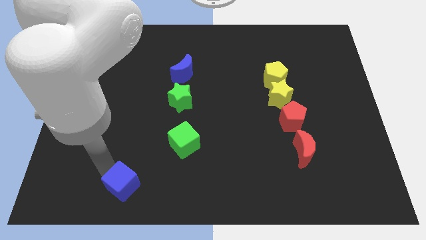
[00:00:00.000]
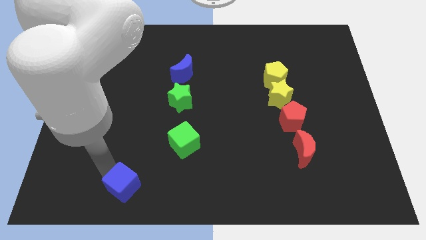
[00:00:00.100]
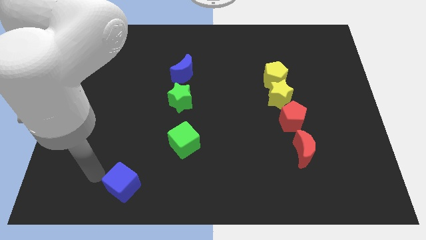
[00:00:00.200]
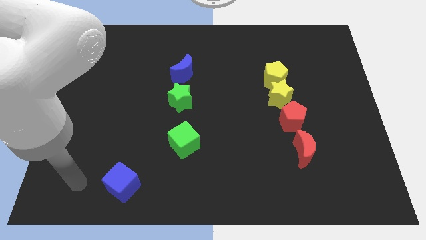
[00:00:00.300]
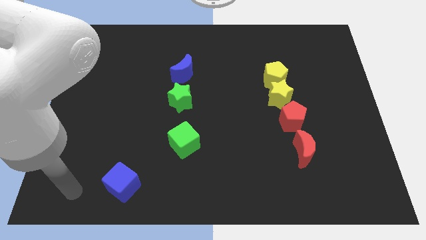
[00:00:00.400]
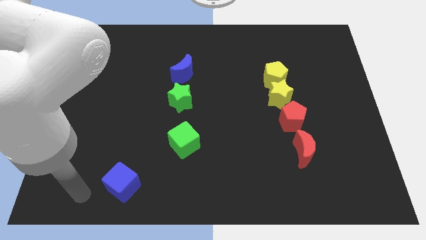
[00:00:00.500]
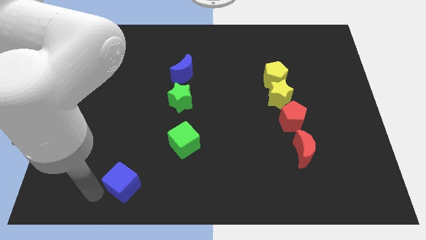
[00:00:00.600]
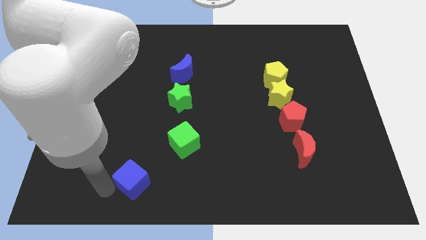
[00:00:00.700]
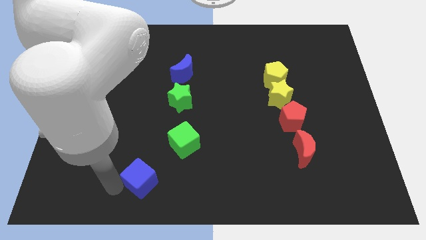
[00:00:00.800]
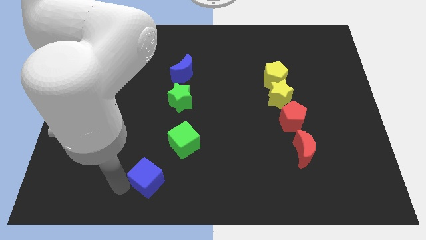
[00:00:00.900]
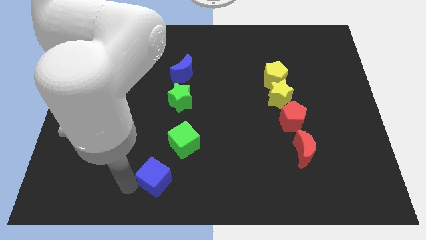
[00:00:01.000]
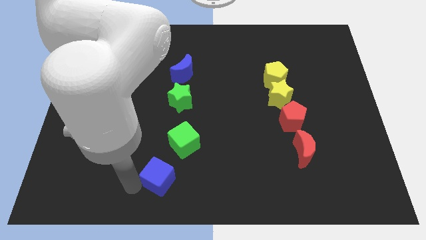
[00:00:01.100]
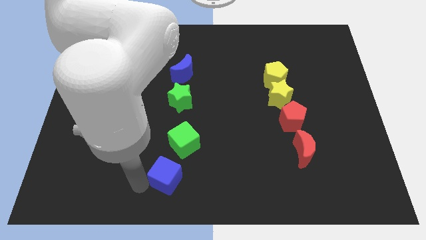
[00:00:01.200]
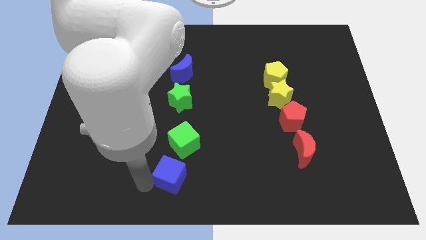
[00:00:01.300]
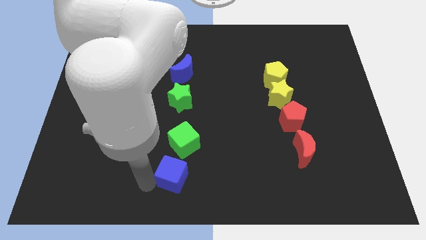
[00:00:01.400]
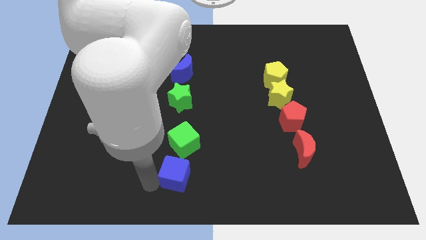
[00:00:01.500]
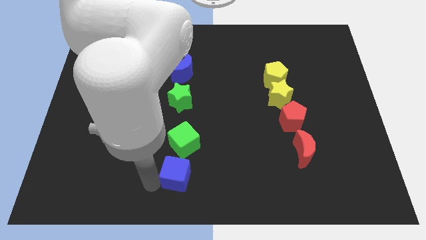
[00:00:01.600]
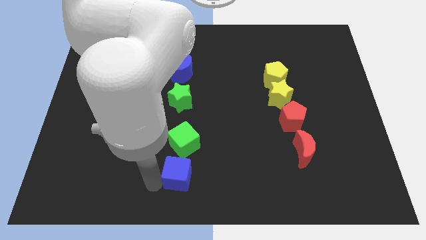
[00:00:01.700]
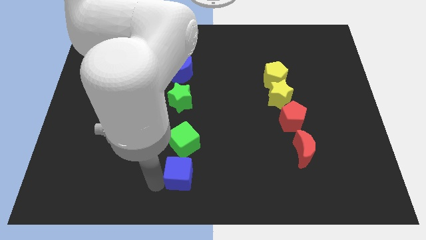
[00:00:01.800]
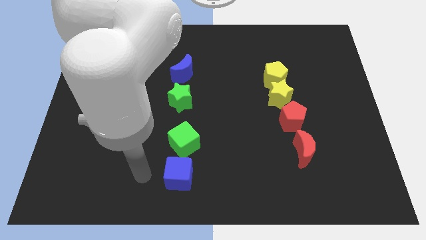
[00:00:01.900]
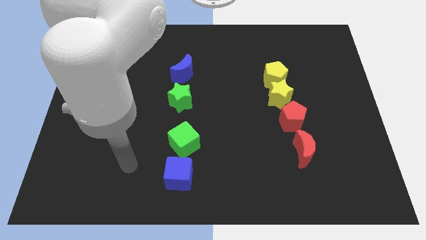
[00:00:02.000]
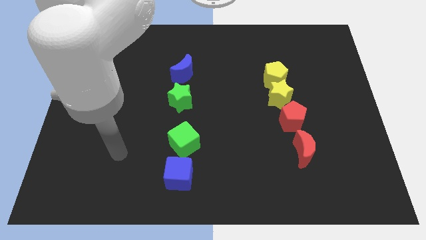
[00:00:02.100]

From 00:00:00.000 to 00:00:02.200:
place a blue cube to the bottom of the green cube

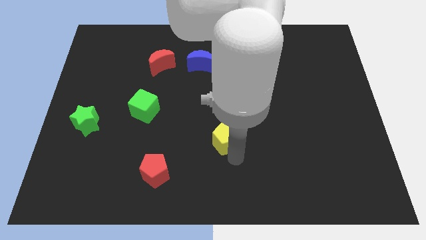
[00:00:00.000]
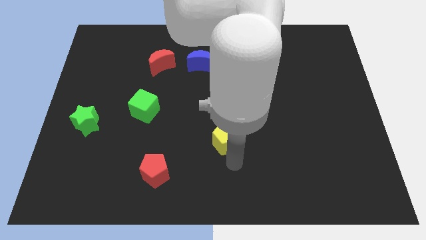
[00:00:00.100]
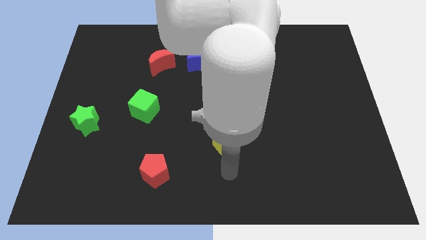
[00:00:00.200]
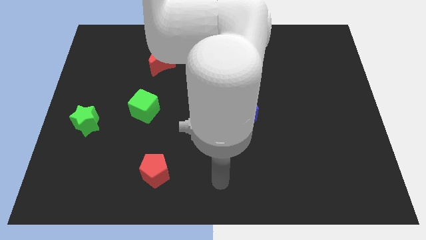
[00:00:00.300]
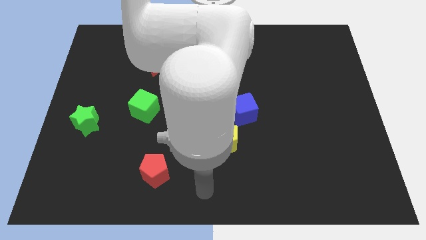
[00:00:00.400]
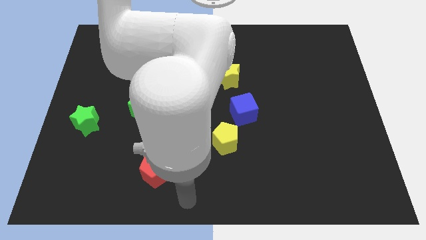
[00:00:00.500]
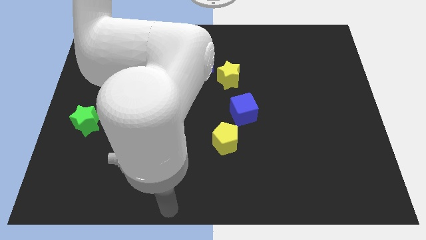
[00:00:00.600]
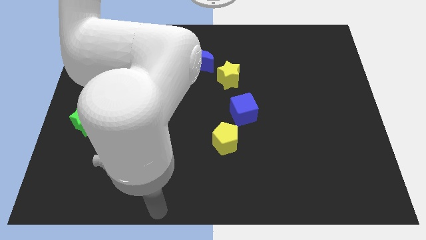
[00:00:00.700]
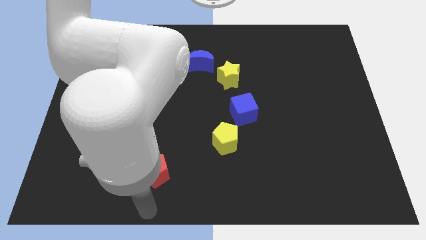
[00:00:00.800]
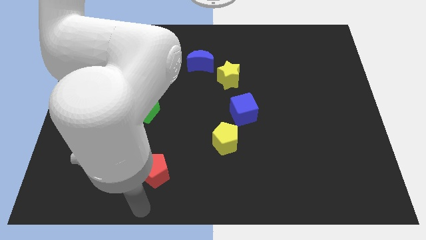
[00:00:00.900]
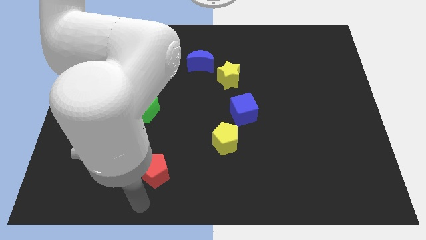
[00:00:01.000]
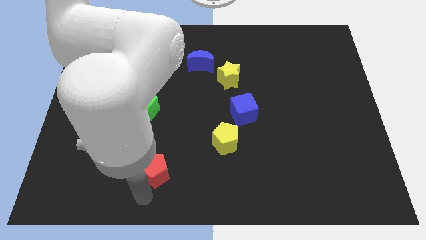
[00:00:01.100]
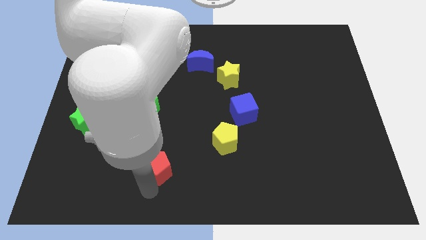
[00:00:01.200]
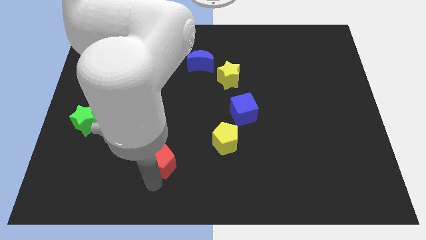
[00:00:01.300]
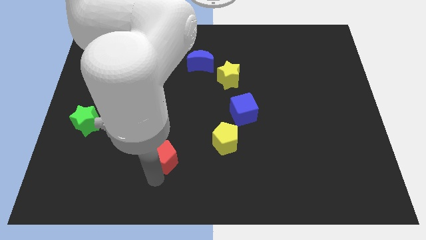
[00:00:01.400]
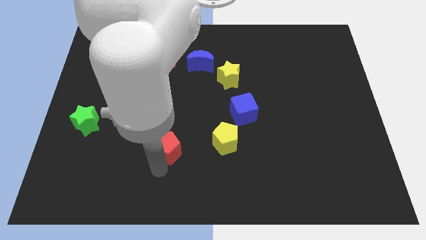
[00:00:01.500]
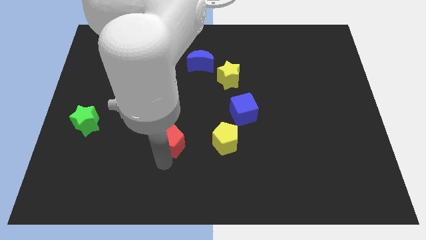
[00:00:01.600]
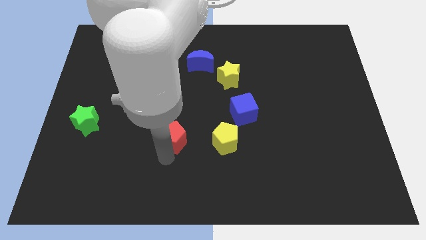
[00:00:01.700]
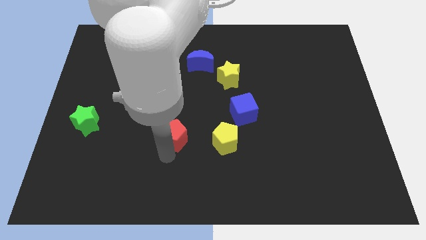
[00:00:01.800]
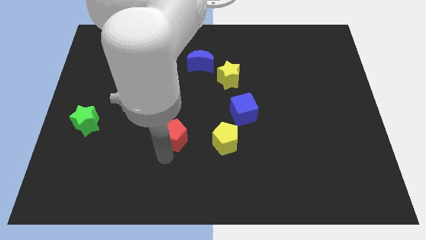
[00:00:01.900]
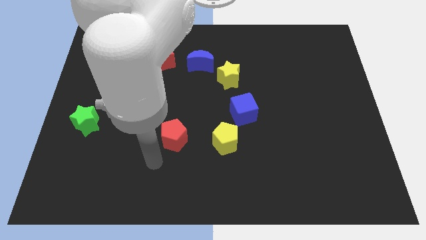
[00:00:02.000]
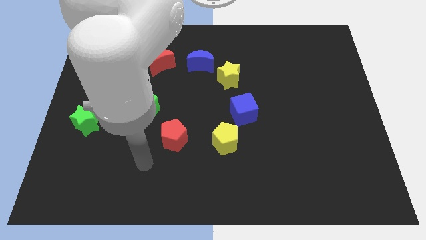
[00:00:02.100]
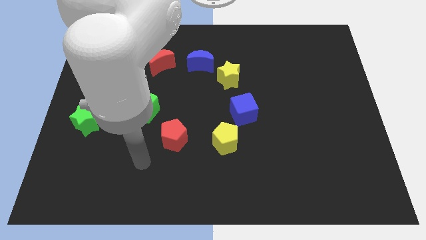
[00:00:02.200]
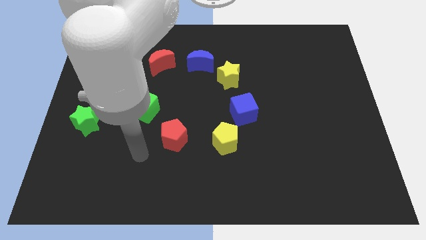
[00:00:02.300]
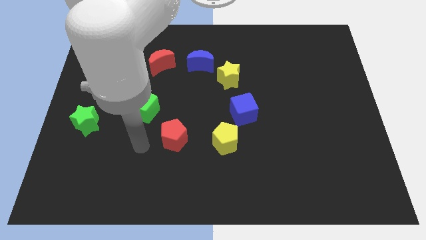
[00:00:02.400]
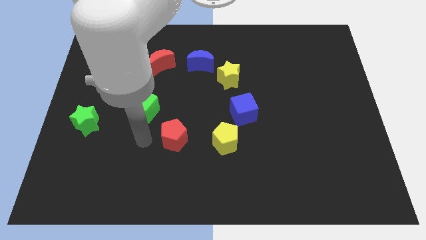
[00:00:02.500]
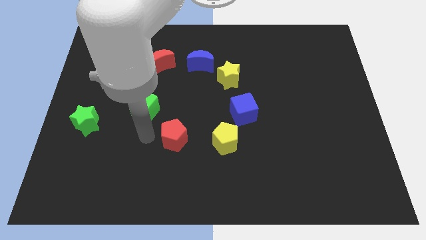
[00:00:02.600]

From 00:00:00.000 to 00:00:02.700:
push the red pentagon to the left of the yellow pentagon

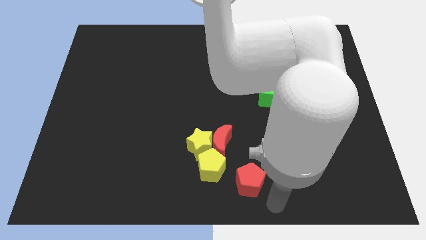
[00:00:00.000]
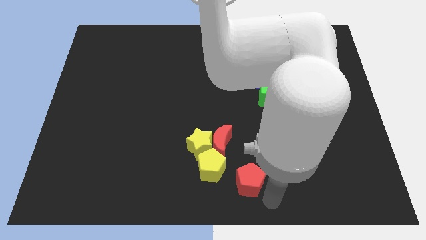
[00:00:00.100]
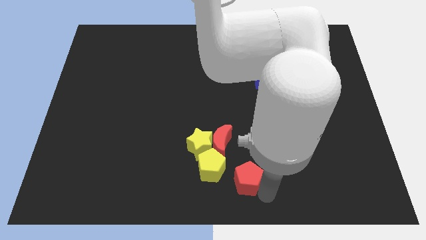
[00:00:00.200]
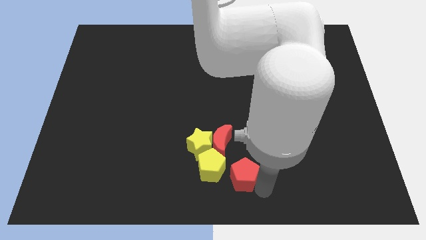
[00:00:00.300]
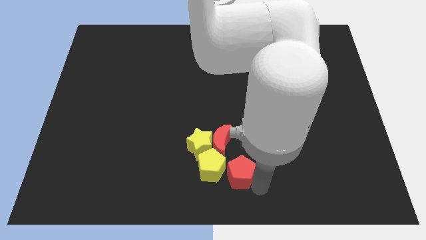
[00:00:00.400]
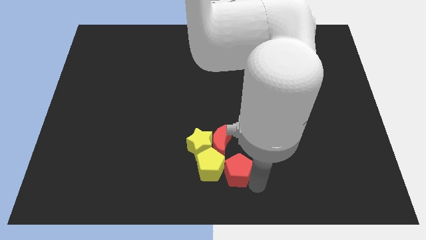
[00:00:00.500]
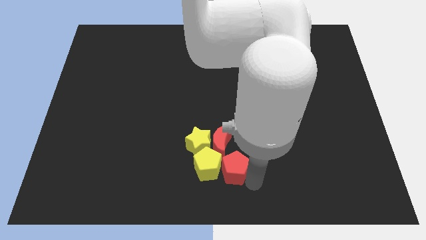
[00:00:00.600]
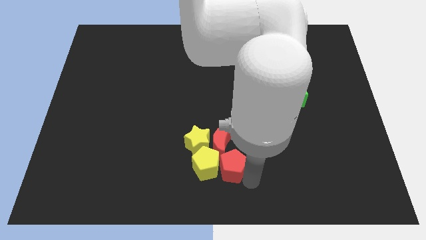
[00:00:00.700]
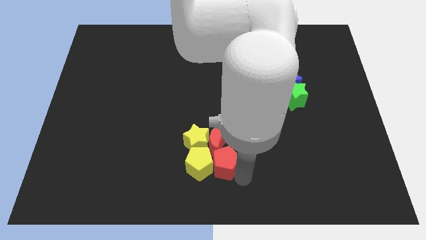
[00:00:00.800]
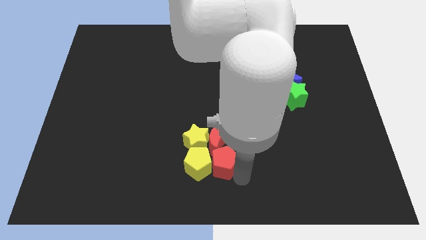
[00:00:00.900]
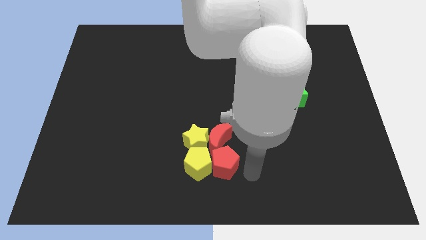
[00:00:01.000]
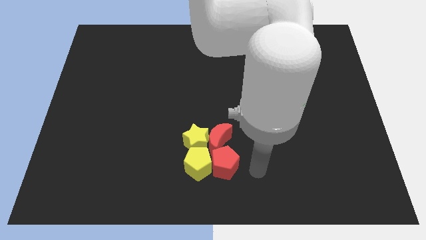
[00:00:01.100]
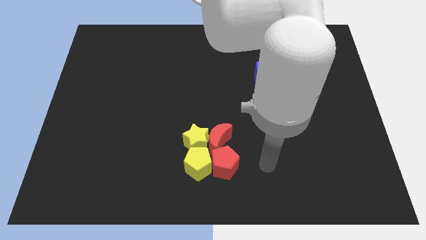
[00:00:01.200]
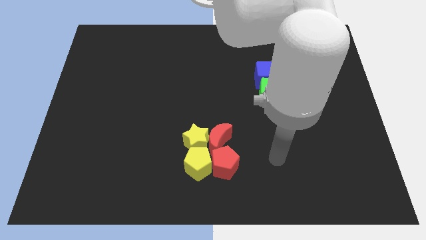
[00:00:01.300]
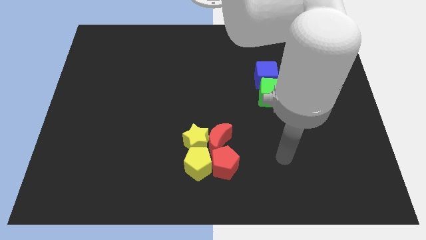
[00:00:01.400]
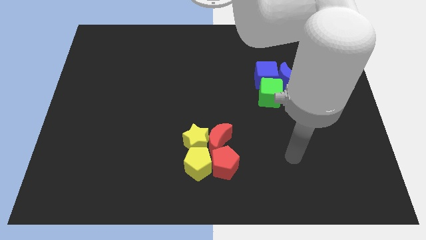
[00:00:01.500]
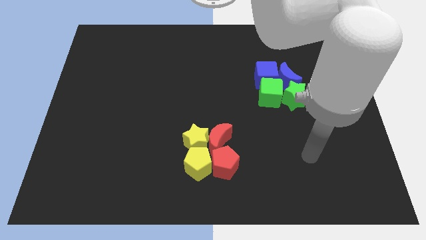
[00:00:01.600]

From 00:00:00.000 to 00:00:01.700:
push red pentagon beside yellow pentagon

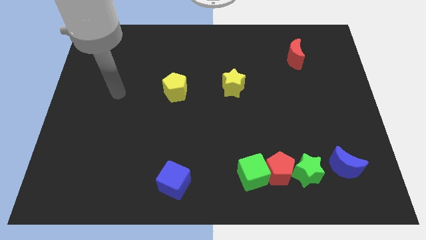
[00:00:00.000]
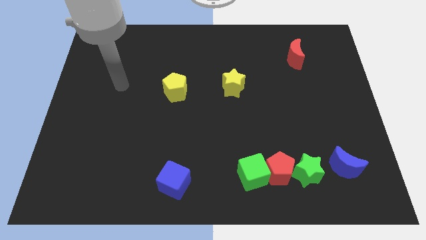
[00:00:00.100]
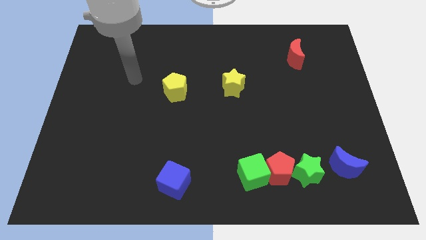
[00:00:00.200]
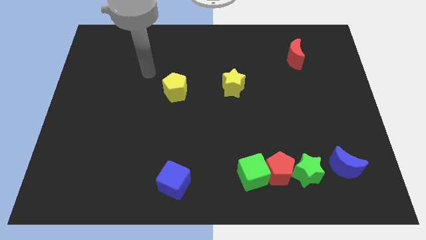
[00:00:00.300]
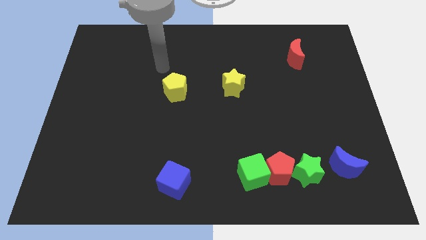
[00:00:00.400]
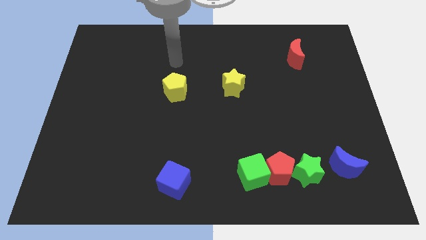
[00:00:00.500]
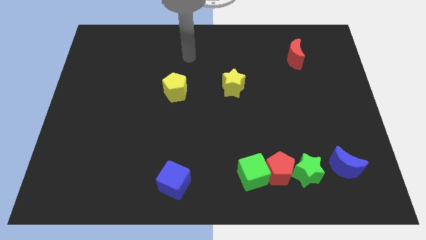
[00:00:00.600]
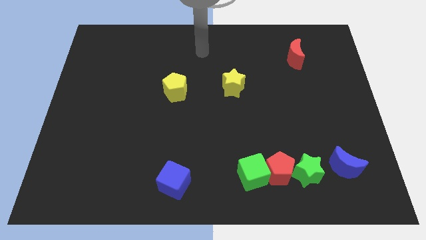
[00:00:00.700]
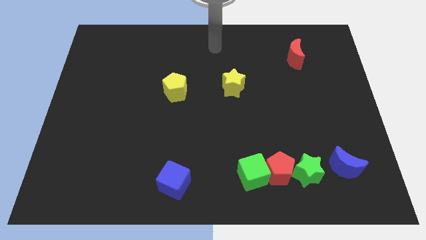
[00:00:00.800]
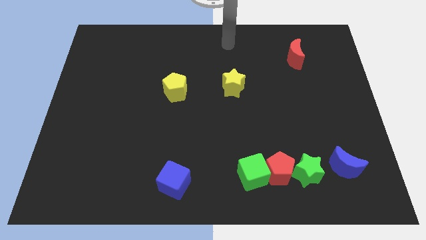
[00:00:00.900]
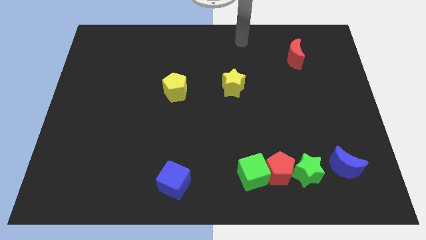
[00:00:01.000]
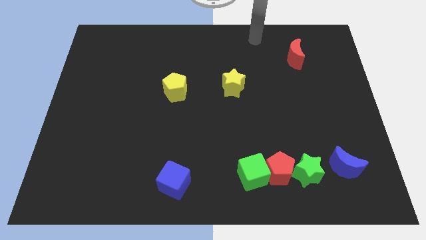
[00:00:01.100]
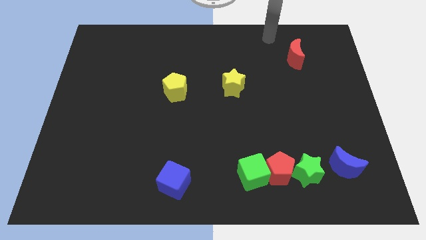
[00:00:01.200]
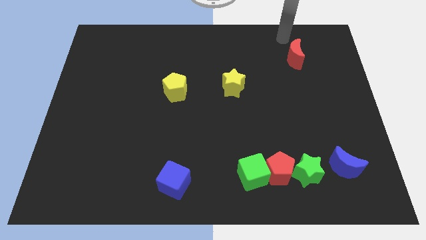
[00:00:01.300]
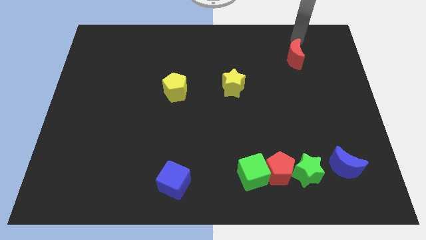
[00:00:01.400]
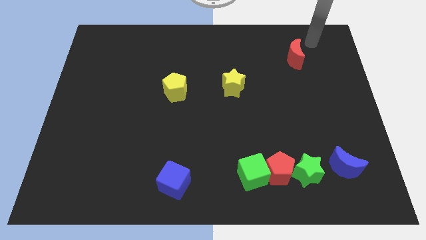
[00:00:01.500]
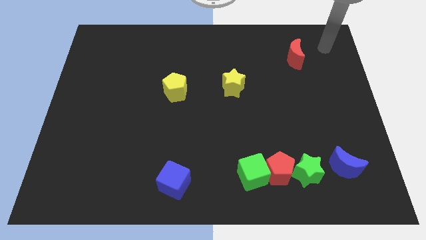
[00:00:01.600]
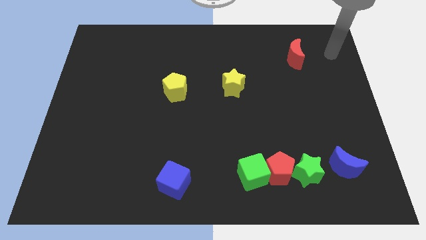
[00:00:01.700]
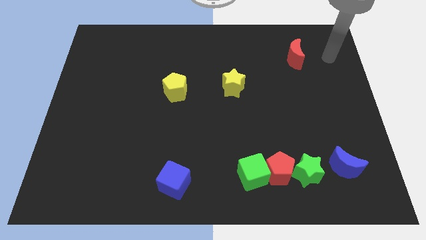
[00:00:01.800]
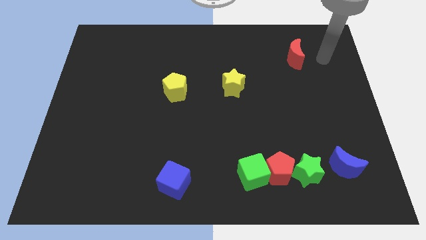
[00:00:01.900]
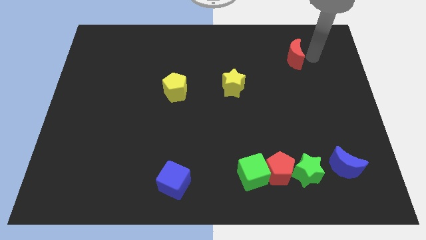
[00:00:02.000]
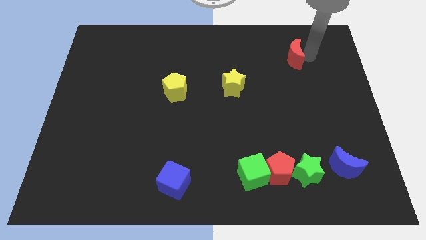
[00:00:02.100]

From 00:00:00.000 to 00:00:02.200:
point the arm to the right of the red moon
